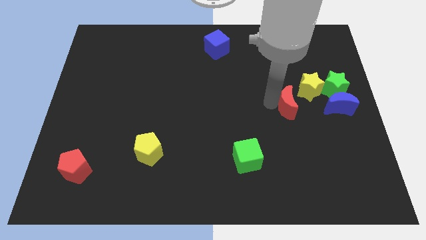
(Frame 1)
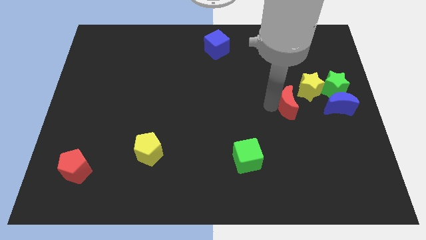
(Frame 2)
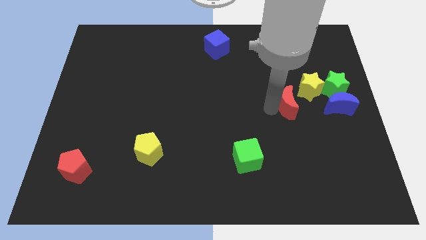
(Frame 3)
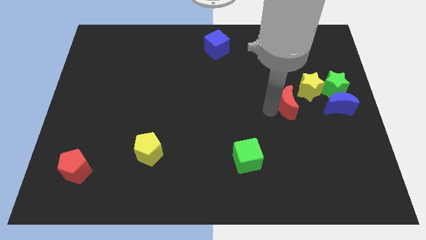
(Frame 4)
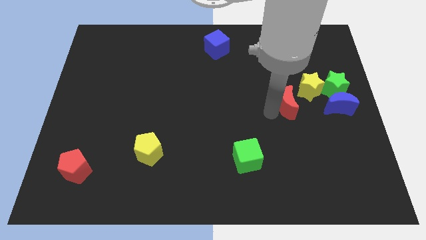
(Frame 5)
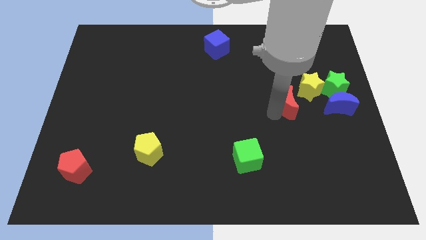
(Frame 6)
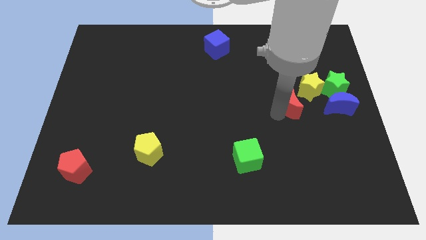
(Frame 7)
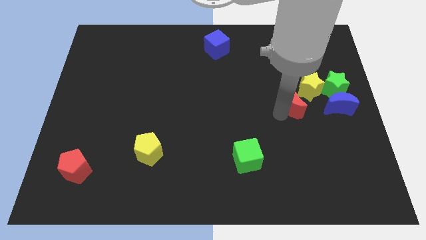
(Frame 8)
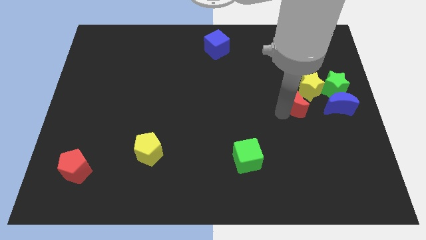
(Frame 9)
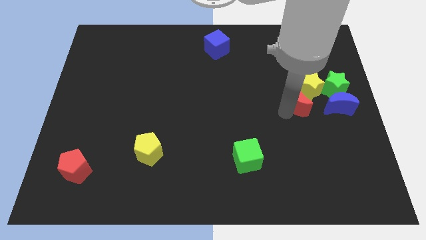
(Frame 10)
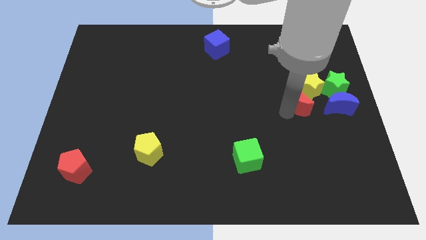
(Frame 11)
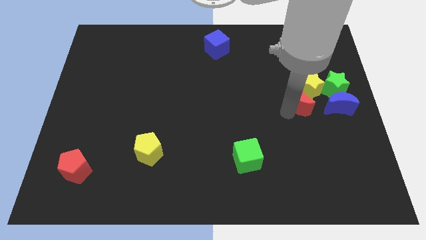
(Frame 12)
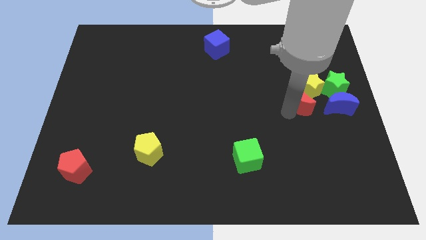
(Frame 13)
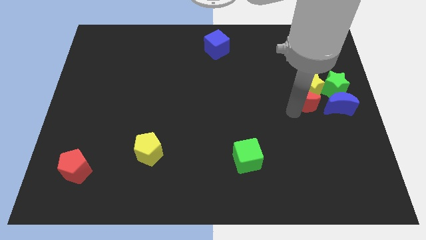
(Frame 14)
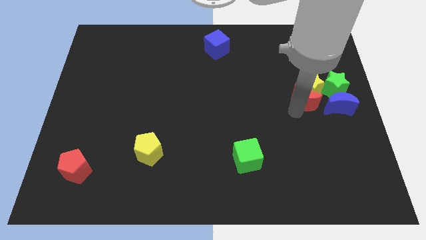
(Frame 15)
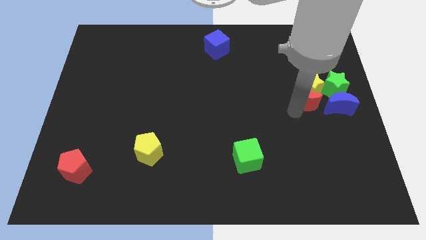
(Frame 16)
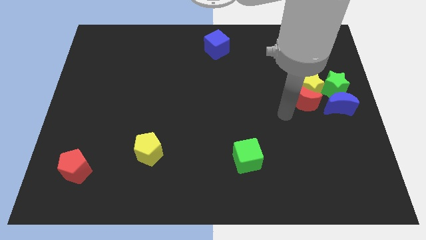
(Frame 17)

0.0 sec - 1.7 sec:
move the red moon below the yellow star

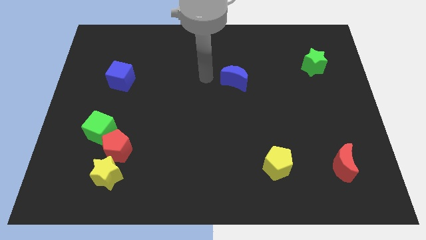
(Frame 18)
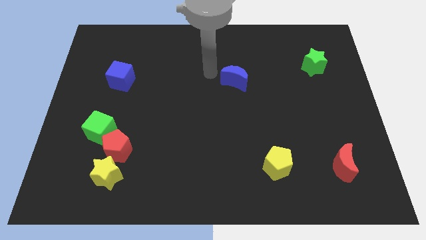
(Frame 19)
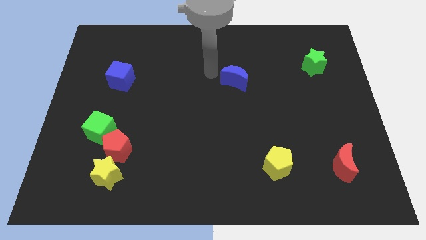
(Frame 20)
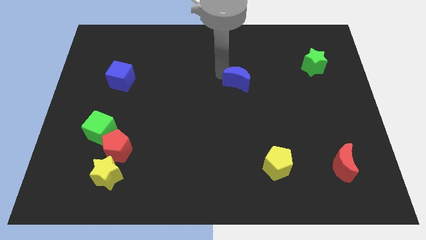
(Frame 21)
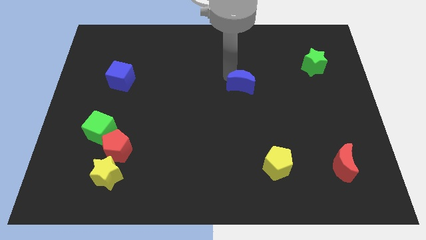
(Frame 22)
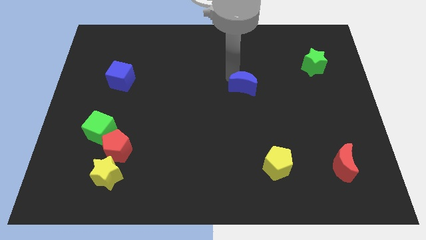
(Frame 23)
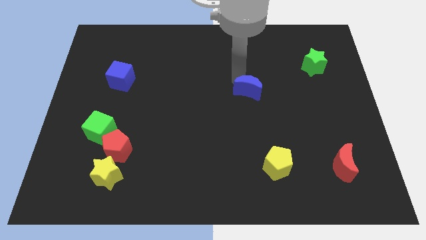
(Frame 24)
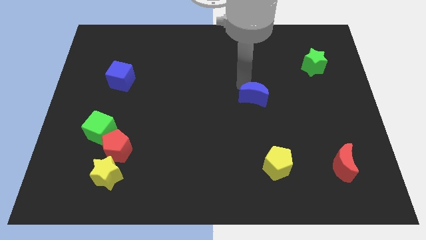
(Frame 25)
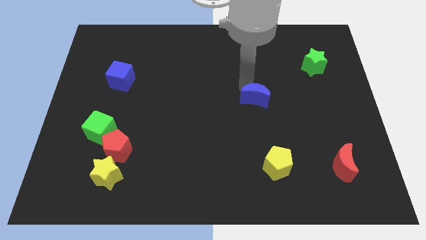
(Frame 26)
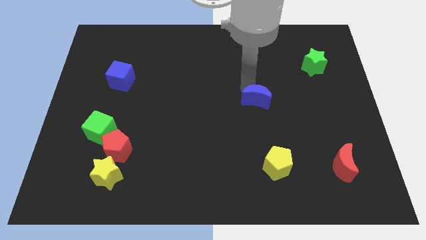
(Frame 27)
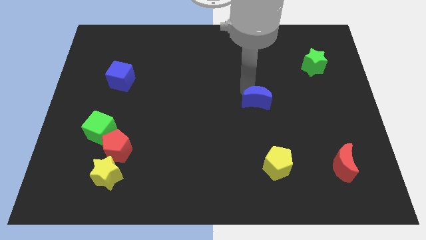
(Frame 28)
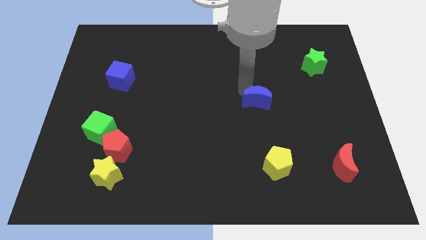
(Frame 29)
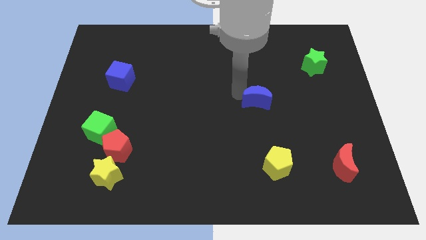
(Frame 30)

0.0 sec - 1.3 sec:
push the blue moon towards the top side of the yellow pentagon

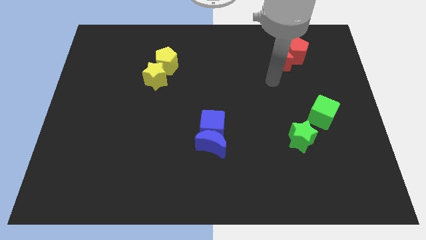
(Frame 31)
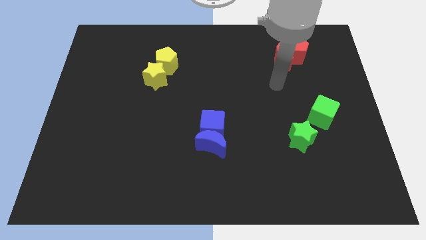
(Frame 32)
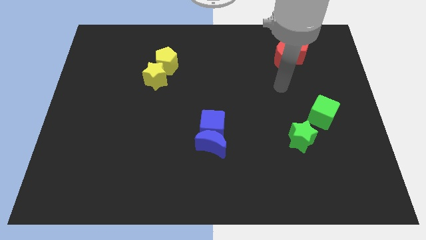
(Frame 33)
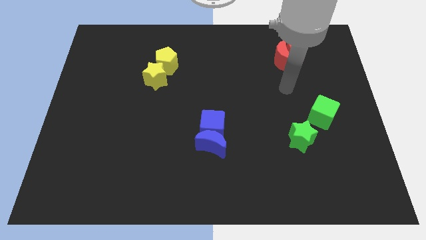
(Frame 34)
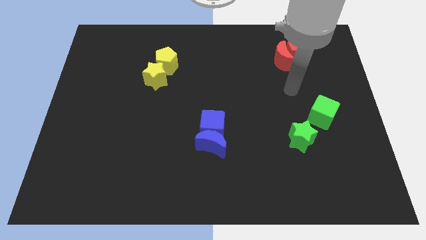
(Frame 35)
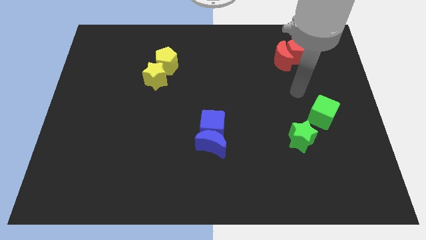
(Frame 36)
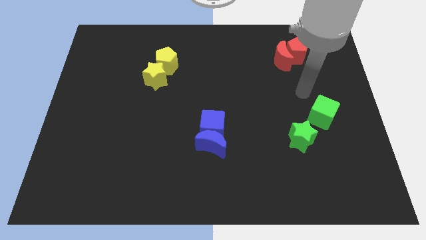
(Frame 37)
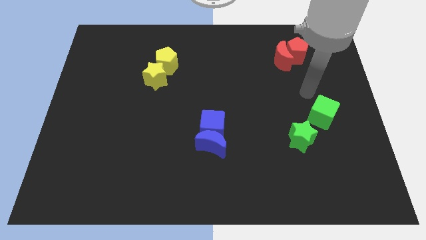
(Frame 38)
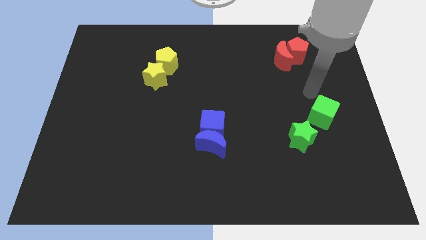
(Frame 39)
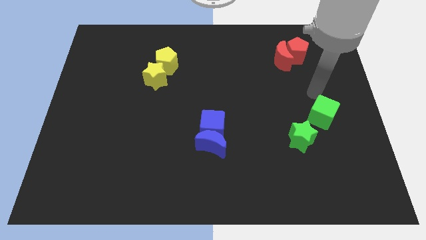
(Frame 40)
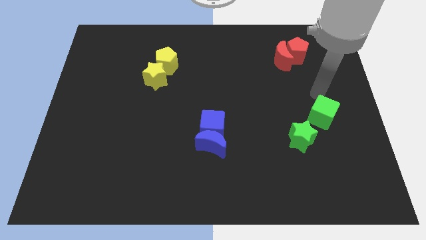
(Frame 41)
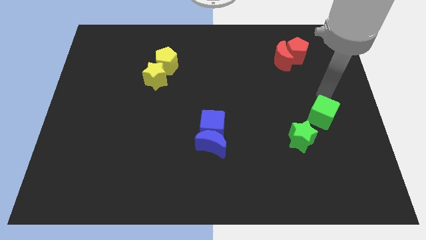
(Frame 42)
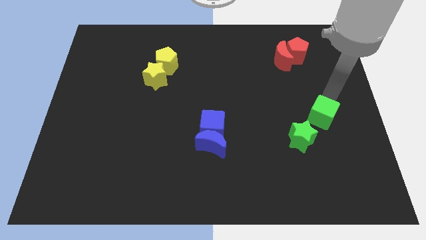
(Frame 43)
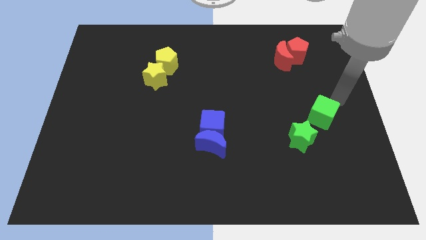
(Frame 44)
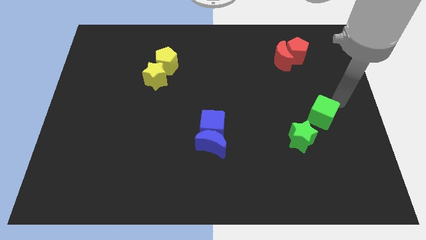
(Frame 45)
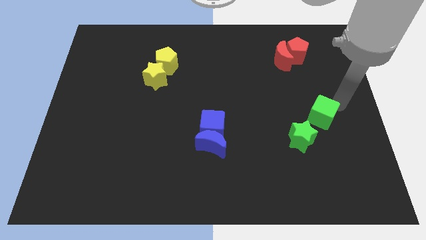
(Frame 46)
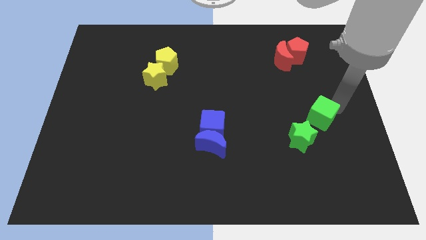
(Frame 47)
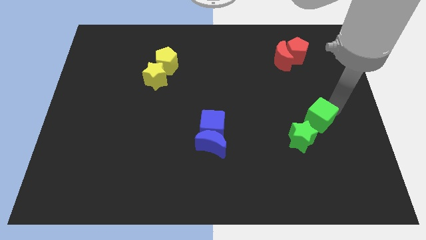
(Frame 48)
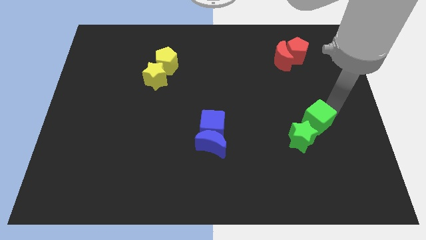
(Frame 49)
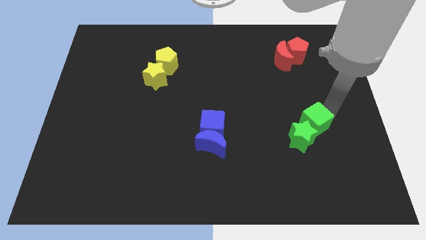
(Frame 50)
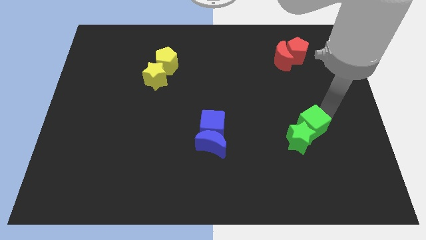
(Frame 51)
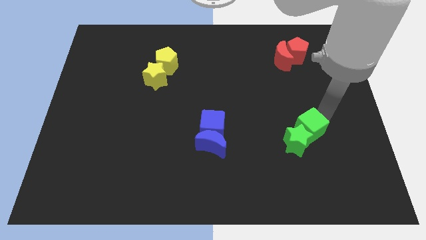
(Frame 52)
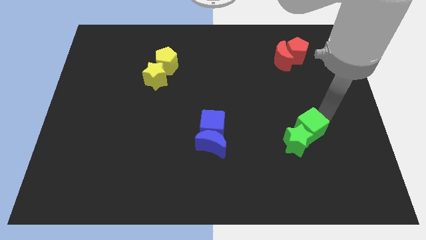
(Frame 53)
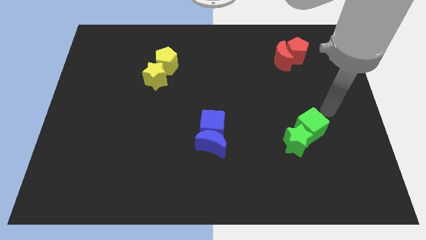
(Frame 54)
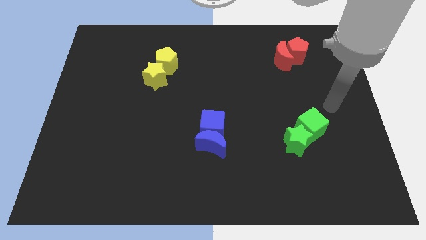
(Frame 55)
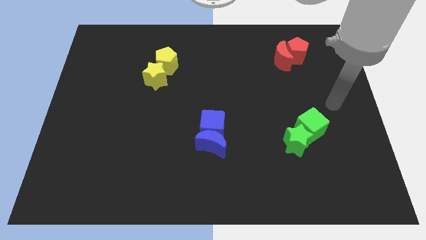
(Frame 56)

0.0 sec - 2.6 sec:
move the green cube into the green star

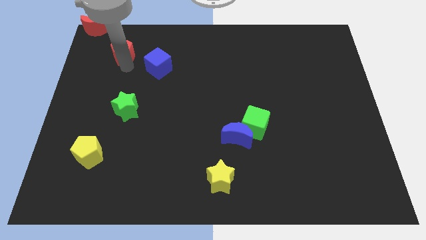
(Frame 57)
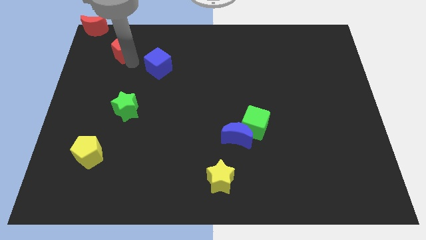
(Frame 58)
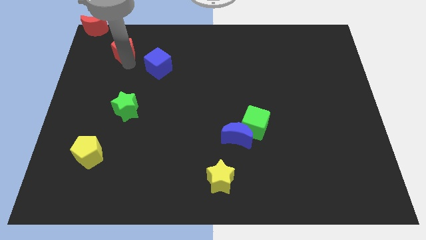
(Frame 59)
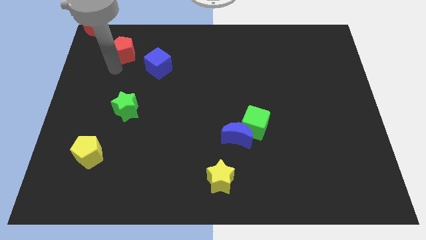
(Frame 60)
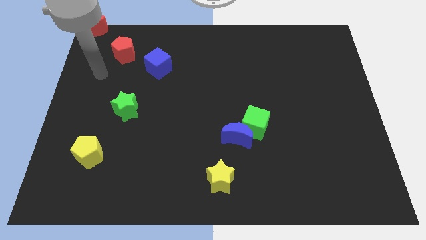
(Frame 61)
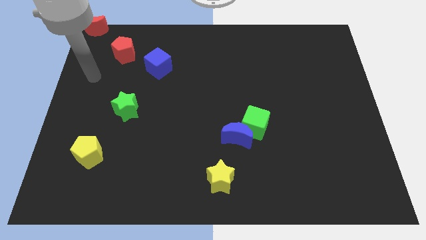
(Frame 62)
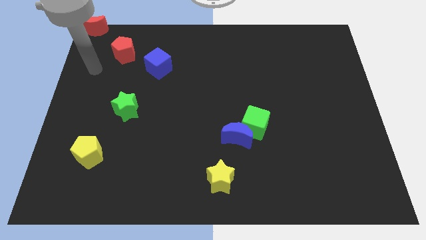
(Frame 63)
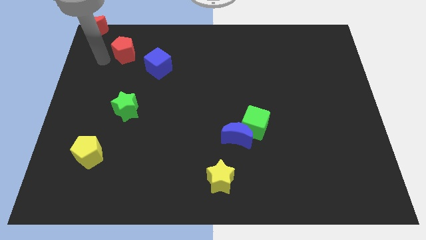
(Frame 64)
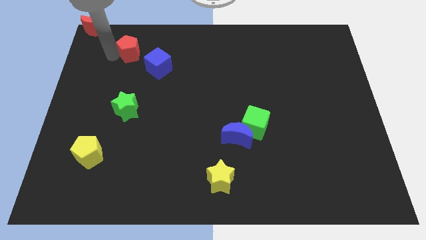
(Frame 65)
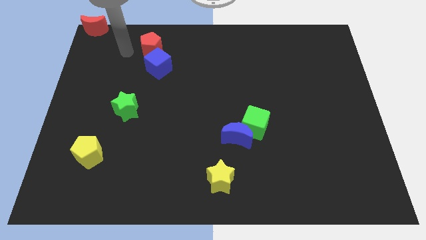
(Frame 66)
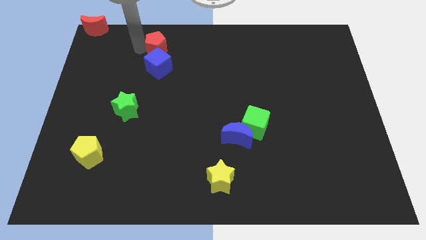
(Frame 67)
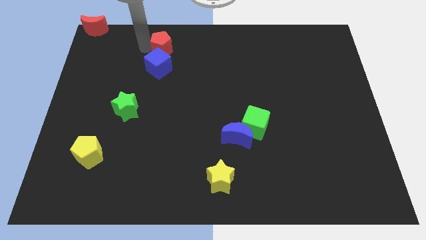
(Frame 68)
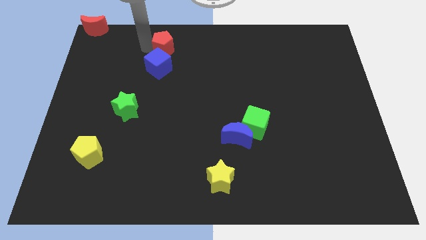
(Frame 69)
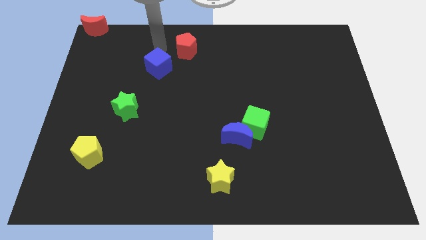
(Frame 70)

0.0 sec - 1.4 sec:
place the red pentagon above the blue cube

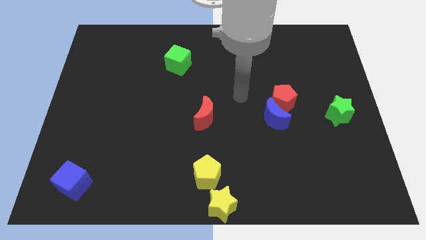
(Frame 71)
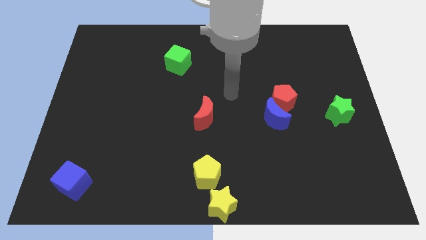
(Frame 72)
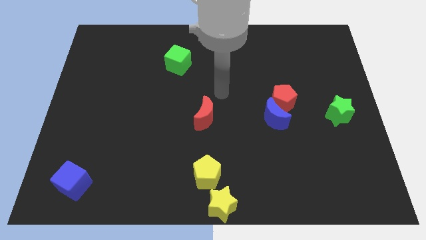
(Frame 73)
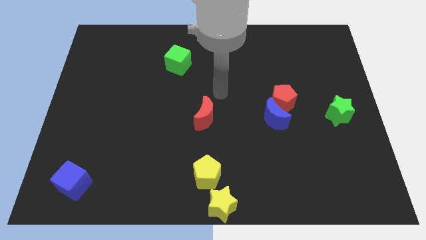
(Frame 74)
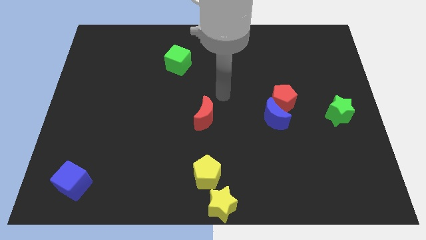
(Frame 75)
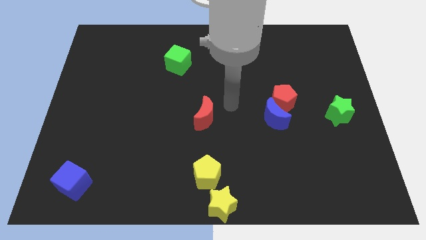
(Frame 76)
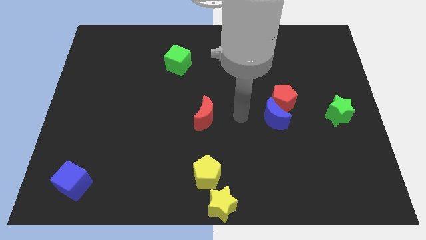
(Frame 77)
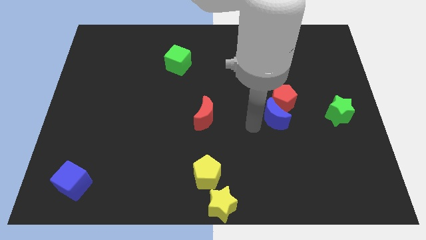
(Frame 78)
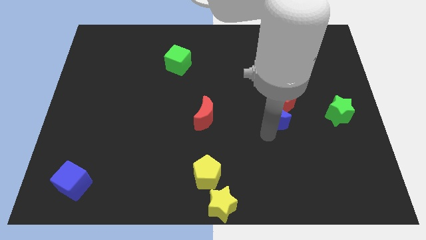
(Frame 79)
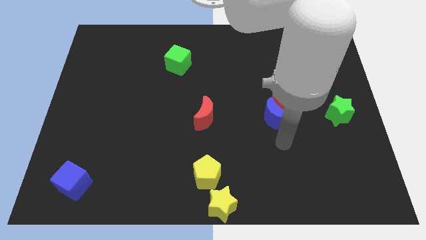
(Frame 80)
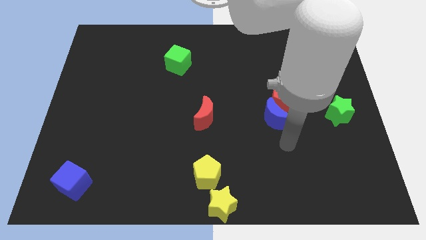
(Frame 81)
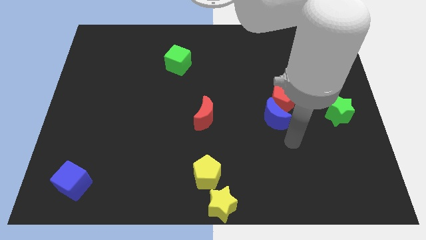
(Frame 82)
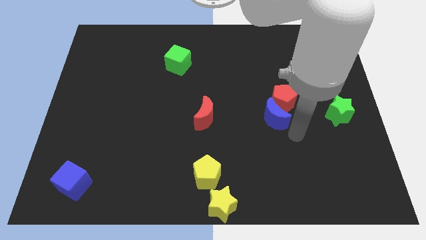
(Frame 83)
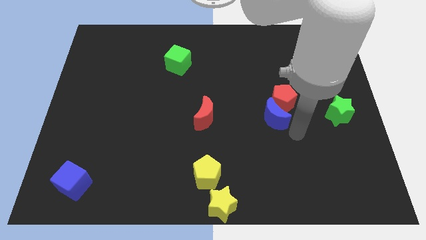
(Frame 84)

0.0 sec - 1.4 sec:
move your arm towards the blue crescent

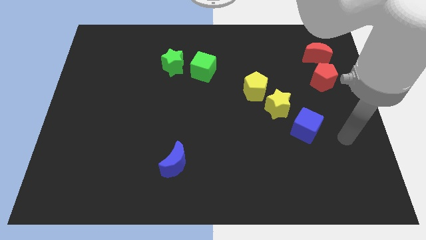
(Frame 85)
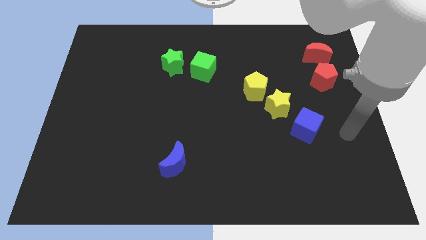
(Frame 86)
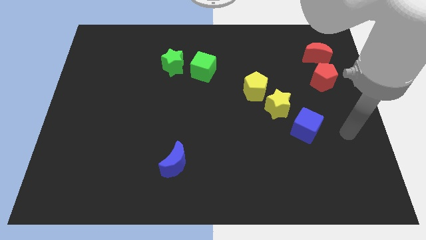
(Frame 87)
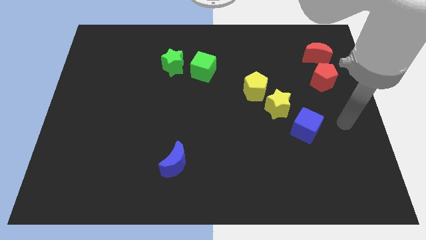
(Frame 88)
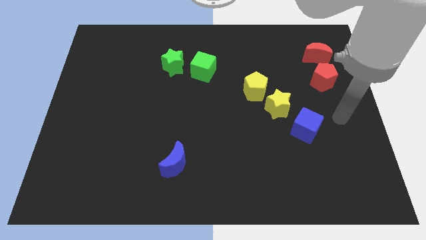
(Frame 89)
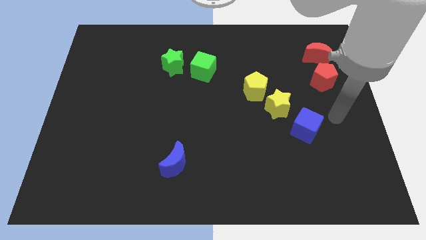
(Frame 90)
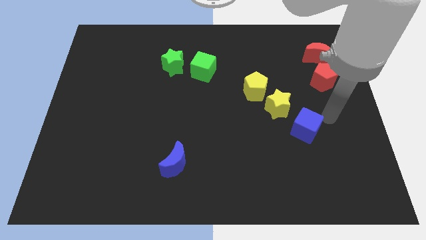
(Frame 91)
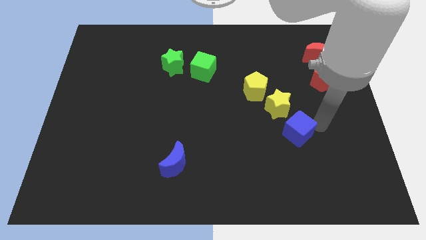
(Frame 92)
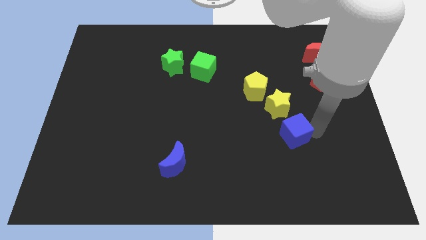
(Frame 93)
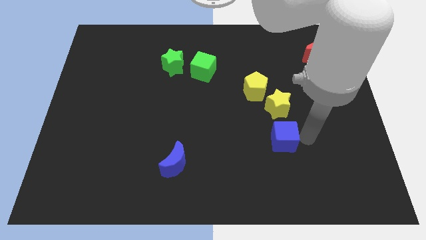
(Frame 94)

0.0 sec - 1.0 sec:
place the blue cube below the yellow star
